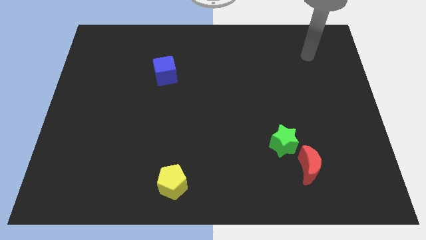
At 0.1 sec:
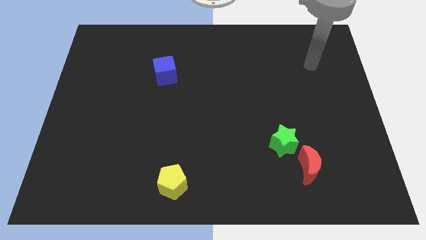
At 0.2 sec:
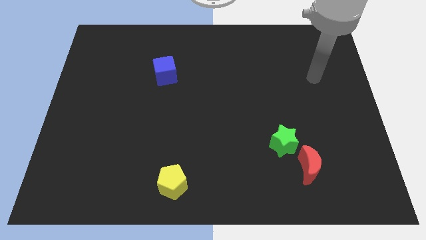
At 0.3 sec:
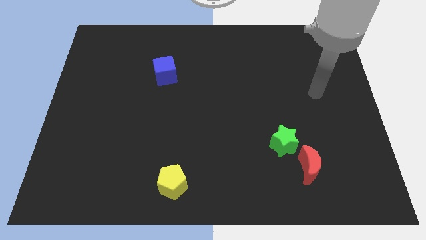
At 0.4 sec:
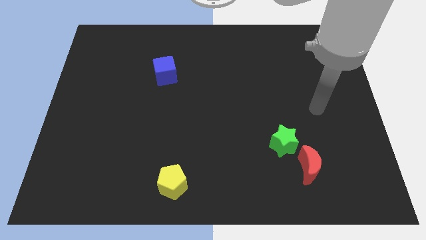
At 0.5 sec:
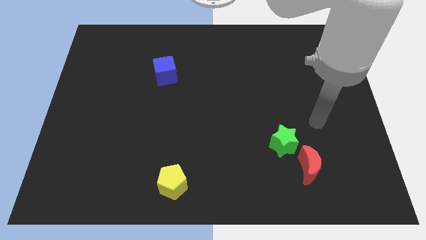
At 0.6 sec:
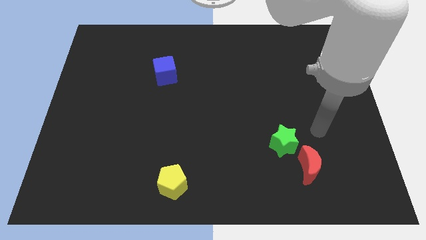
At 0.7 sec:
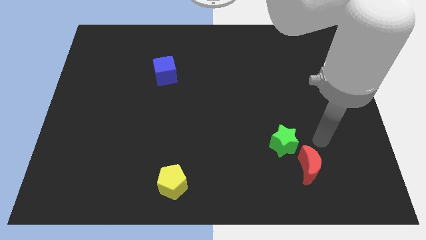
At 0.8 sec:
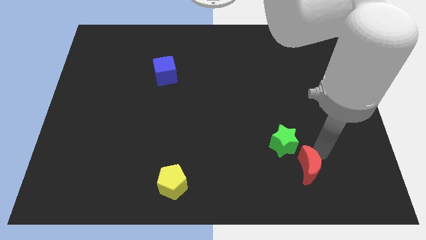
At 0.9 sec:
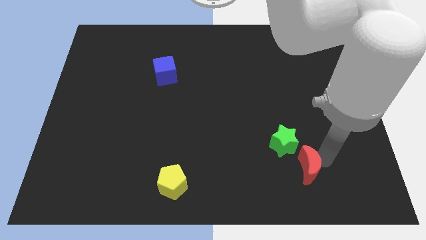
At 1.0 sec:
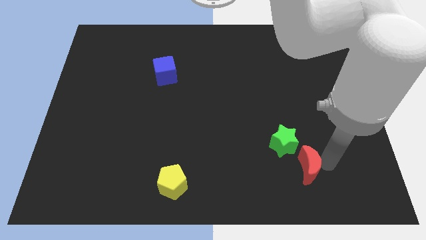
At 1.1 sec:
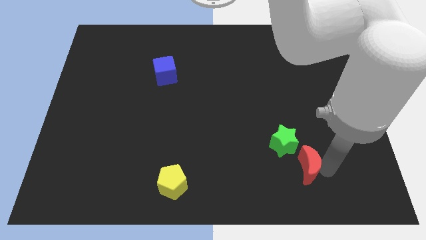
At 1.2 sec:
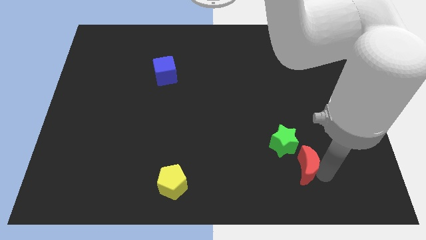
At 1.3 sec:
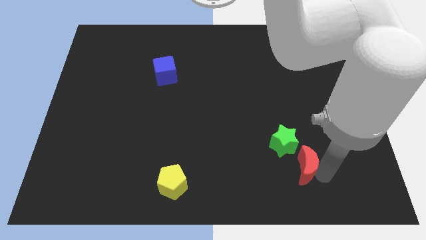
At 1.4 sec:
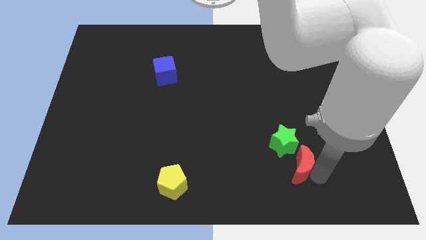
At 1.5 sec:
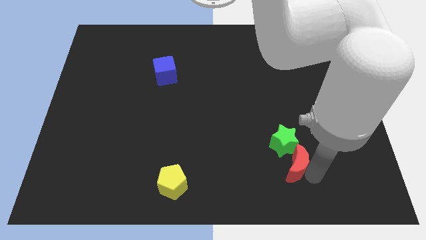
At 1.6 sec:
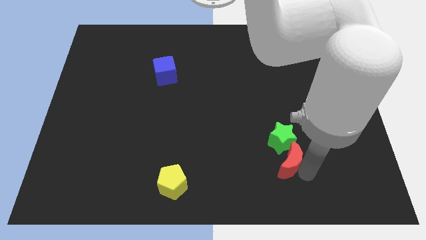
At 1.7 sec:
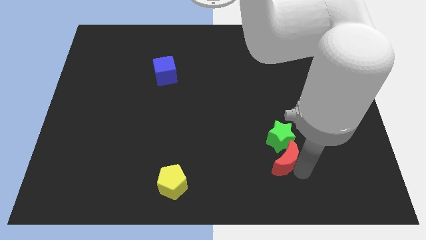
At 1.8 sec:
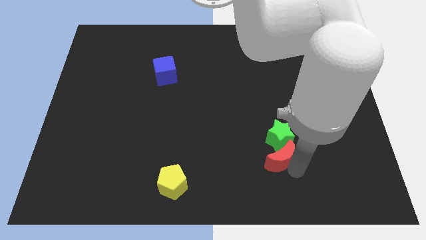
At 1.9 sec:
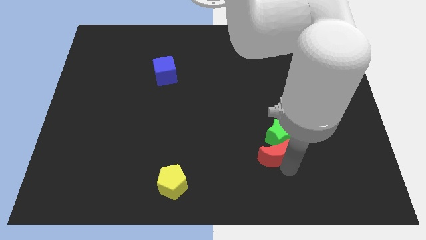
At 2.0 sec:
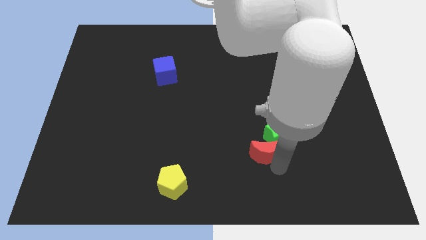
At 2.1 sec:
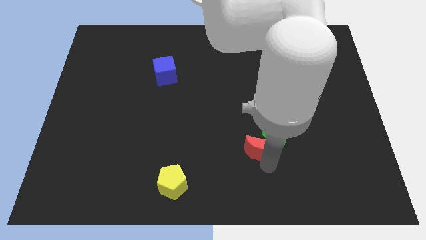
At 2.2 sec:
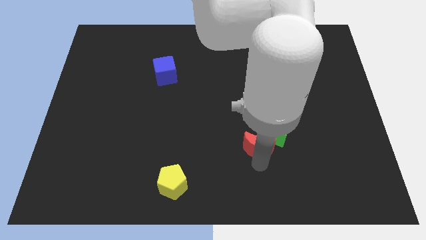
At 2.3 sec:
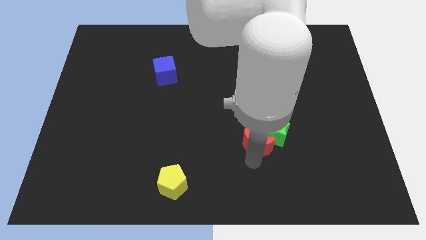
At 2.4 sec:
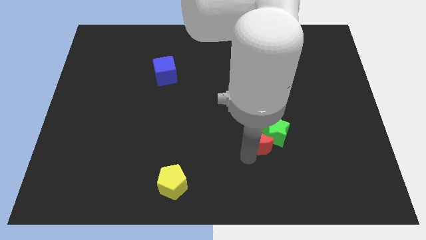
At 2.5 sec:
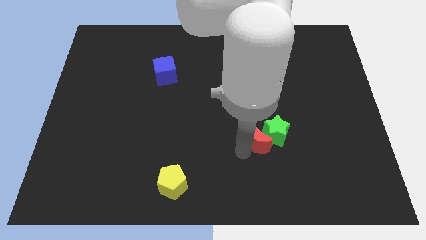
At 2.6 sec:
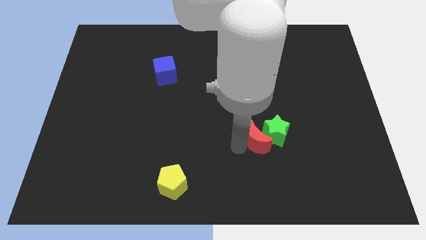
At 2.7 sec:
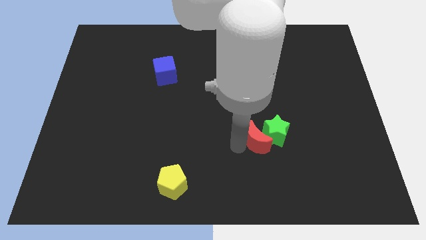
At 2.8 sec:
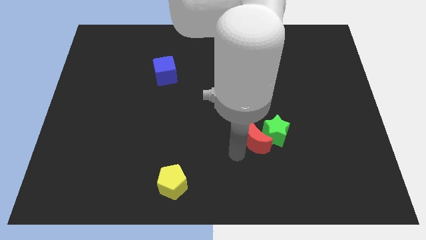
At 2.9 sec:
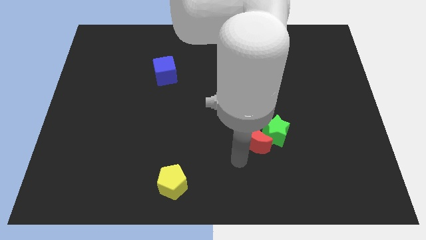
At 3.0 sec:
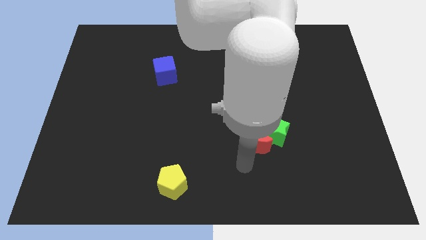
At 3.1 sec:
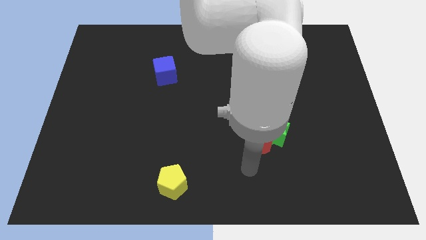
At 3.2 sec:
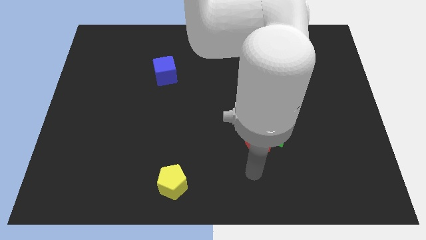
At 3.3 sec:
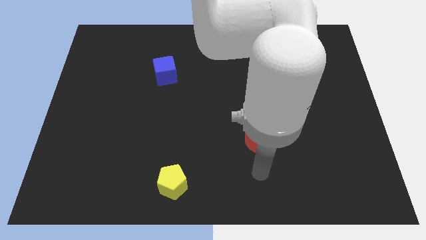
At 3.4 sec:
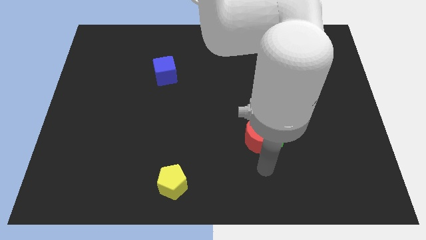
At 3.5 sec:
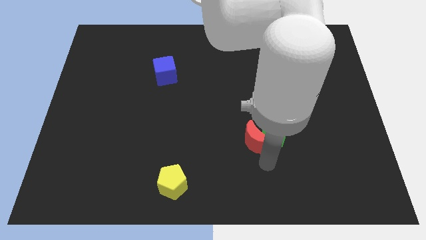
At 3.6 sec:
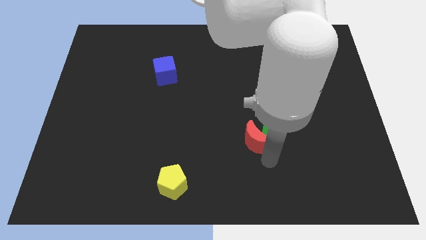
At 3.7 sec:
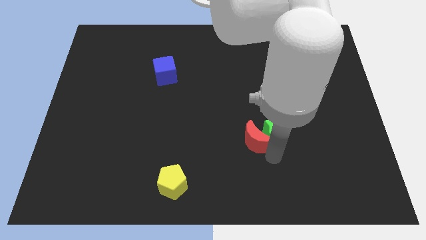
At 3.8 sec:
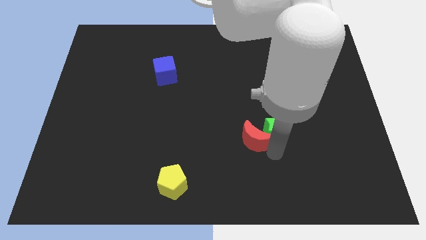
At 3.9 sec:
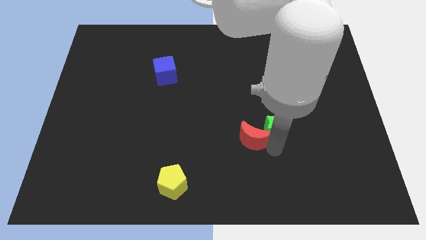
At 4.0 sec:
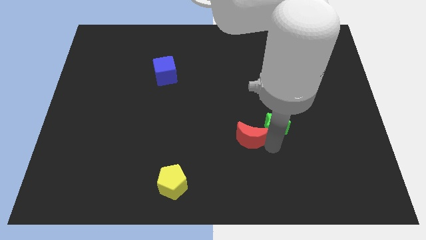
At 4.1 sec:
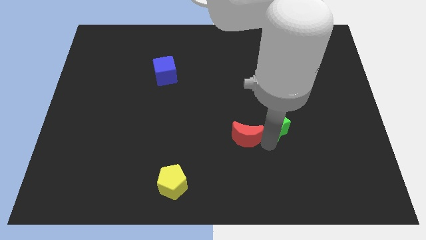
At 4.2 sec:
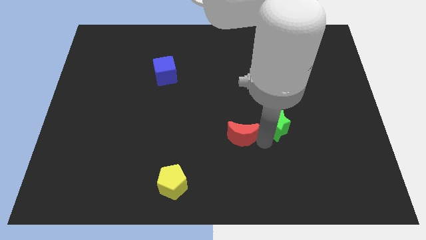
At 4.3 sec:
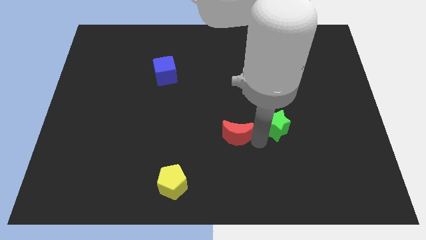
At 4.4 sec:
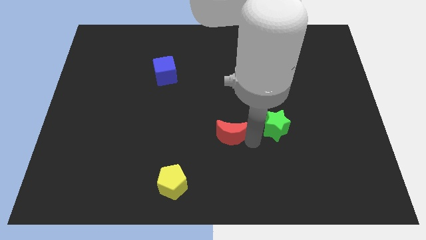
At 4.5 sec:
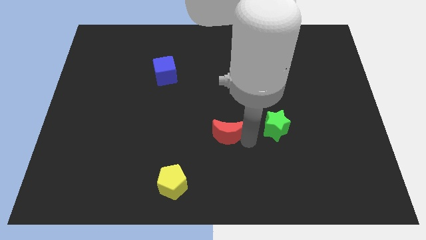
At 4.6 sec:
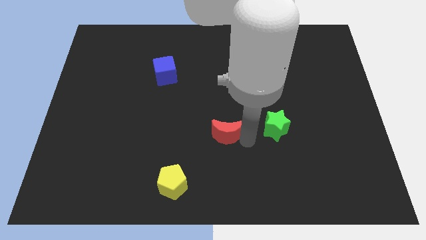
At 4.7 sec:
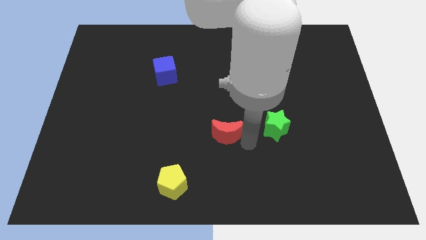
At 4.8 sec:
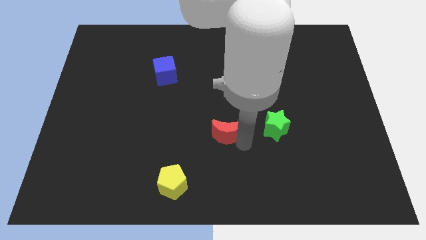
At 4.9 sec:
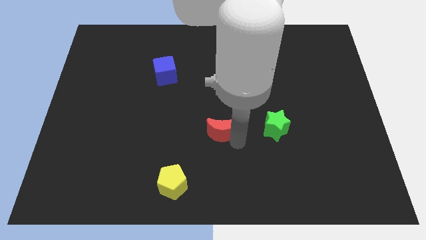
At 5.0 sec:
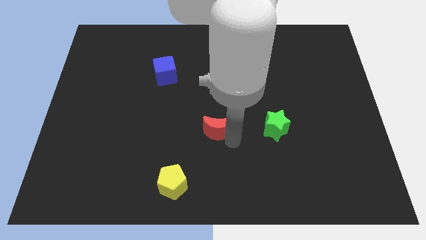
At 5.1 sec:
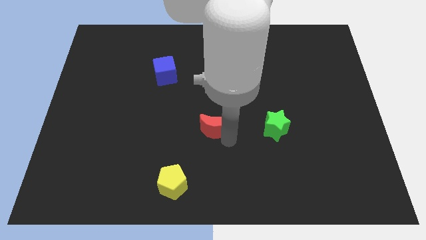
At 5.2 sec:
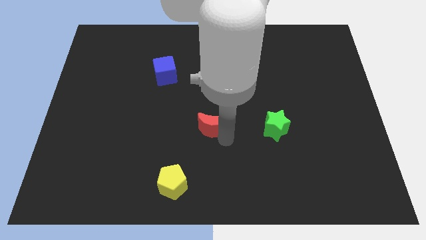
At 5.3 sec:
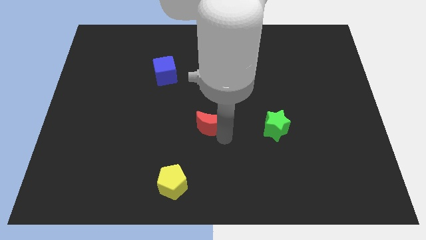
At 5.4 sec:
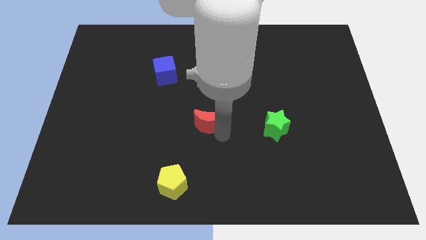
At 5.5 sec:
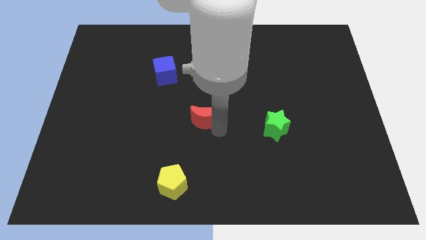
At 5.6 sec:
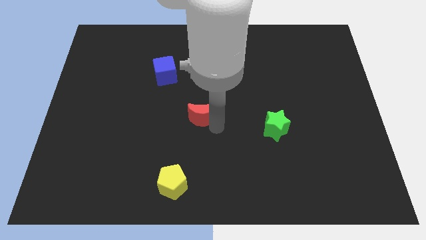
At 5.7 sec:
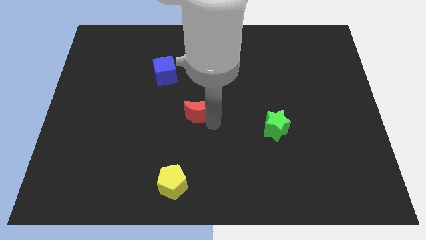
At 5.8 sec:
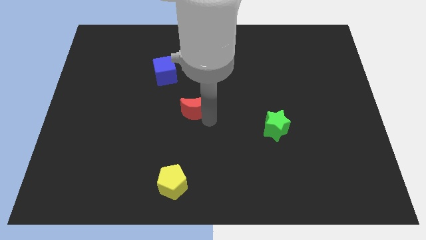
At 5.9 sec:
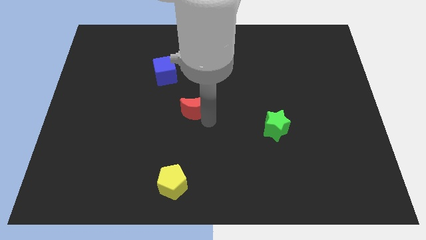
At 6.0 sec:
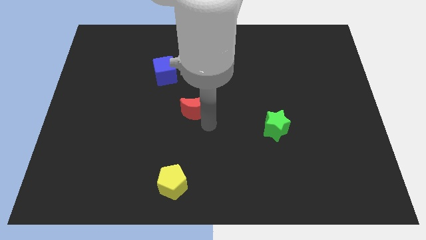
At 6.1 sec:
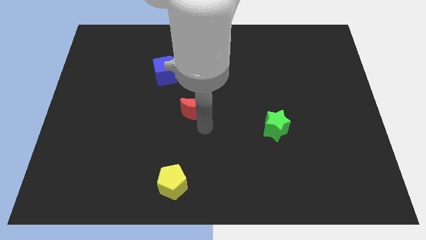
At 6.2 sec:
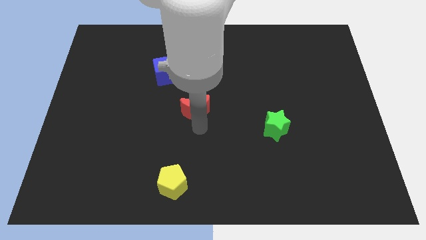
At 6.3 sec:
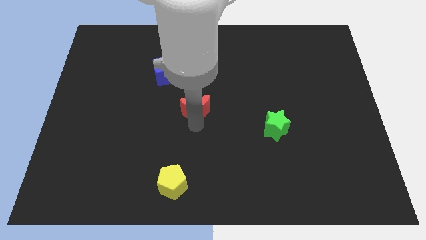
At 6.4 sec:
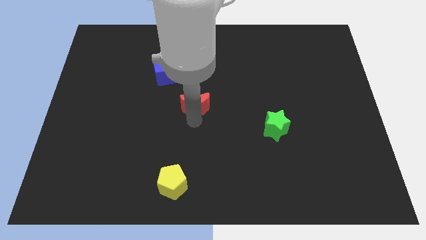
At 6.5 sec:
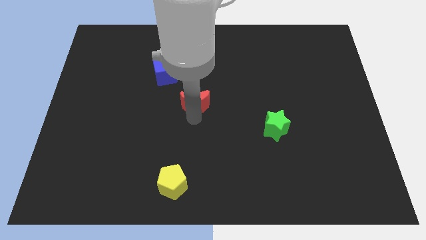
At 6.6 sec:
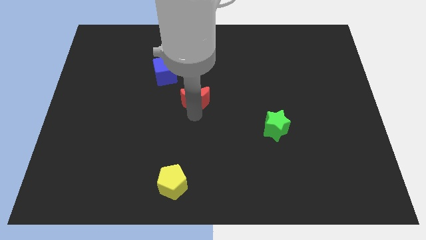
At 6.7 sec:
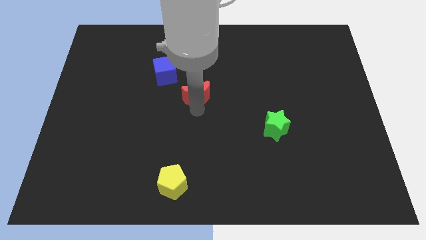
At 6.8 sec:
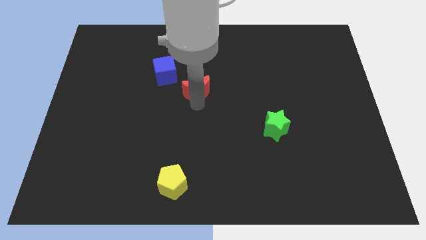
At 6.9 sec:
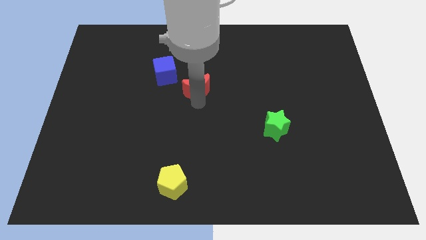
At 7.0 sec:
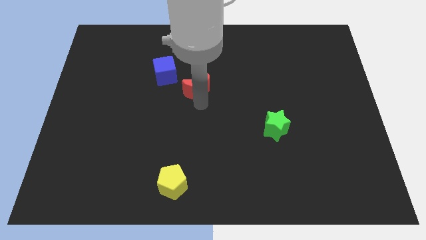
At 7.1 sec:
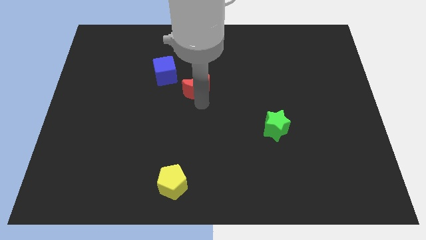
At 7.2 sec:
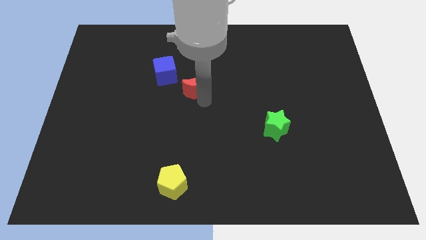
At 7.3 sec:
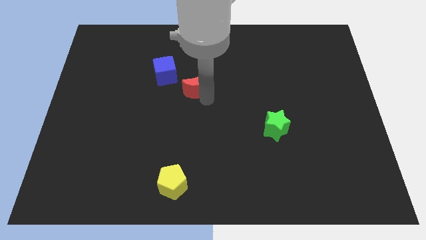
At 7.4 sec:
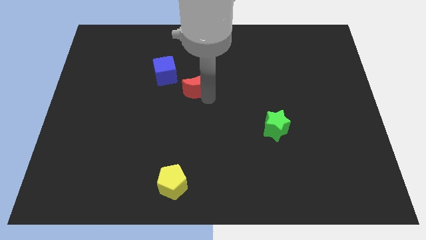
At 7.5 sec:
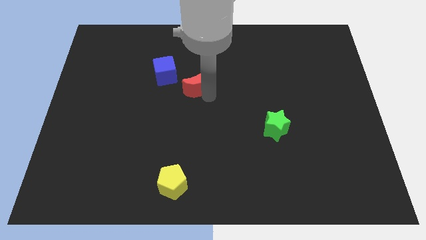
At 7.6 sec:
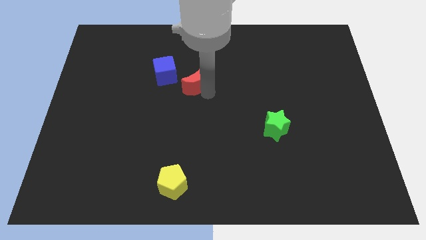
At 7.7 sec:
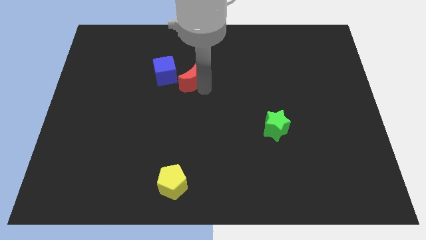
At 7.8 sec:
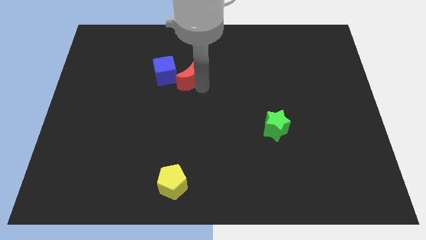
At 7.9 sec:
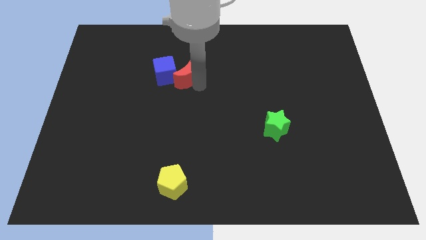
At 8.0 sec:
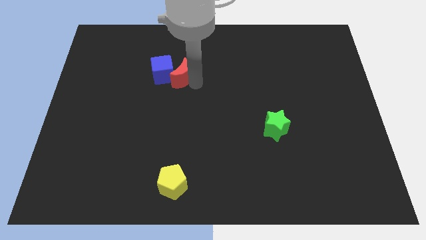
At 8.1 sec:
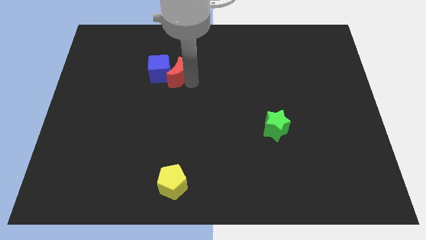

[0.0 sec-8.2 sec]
slide the red block next to the cube

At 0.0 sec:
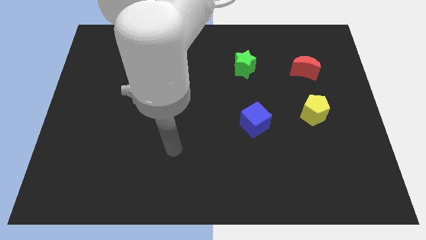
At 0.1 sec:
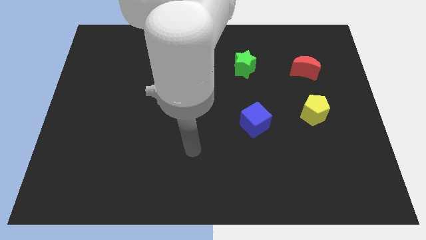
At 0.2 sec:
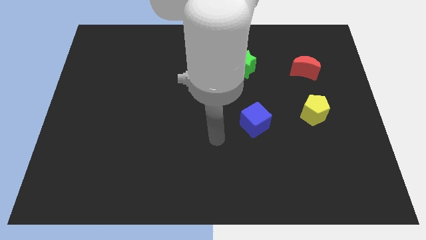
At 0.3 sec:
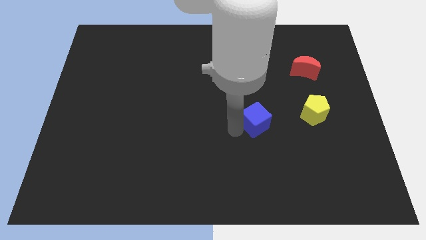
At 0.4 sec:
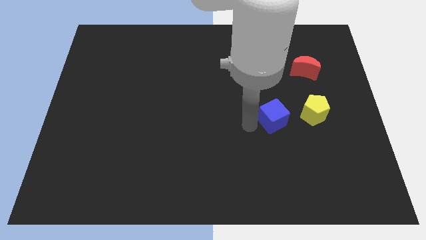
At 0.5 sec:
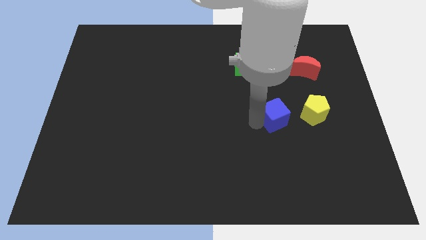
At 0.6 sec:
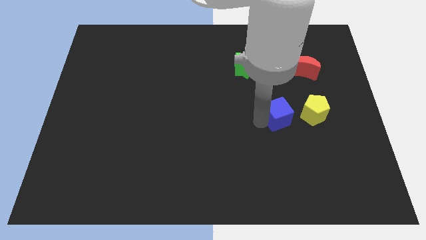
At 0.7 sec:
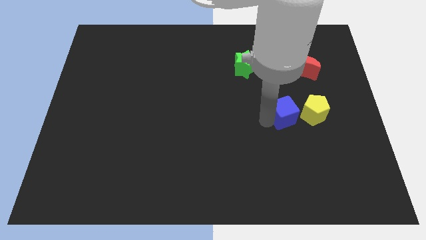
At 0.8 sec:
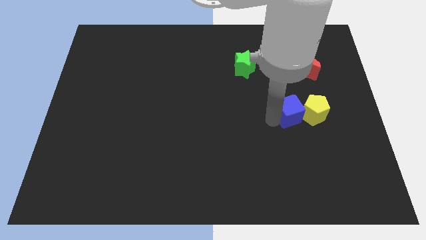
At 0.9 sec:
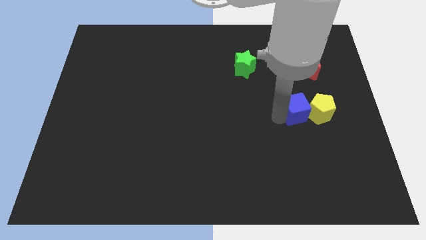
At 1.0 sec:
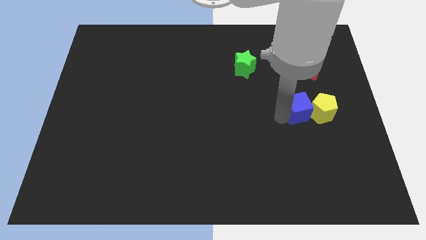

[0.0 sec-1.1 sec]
push the blue block to the yellow pentagon
